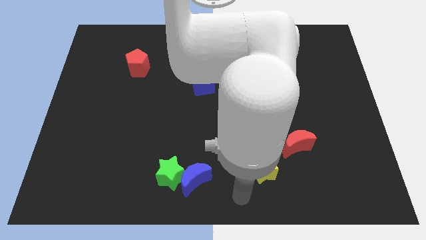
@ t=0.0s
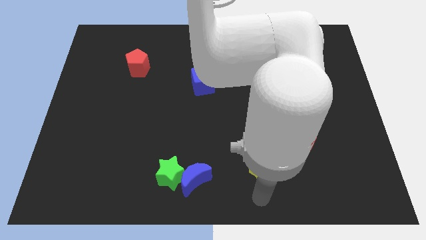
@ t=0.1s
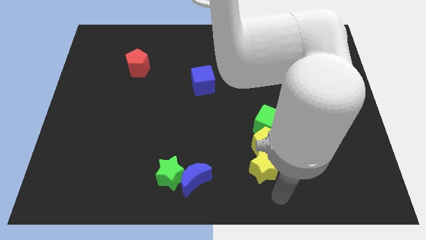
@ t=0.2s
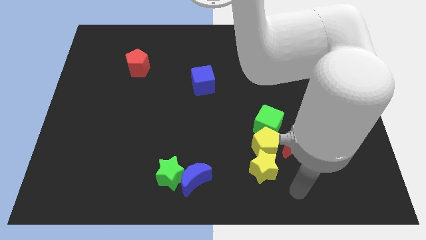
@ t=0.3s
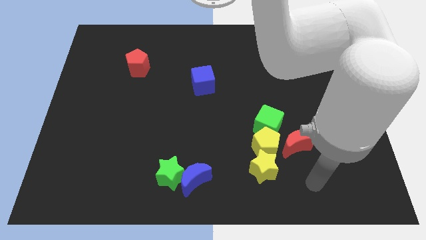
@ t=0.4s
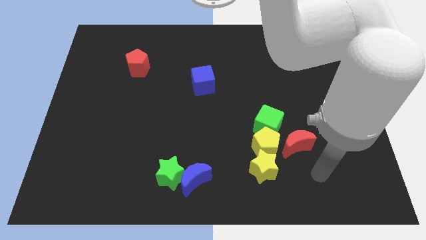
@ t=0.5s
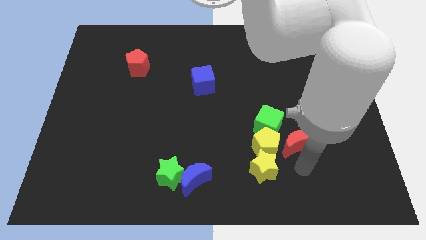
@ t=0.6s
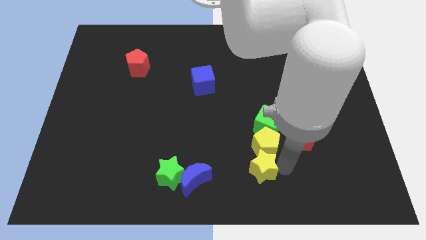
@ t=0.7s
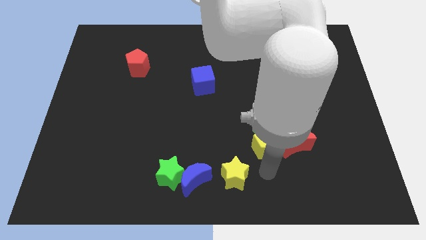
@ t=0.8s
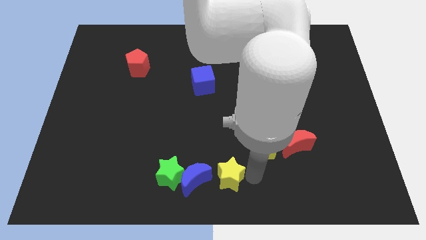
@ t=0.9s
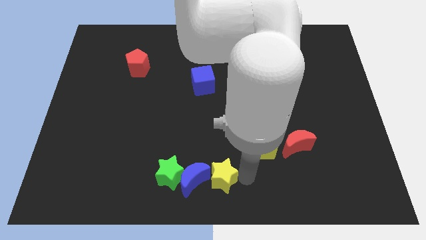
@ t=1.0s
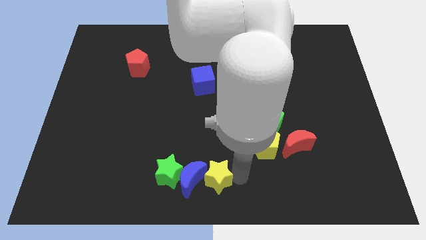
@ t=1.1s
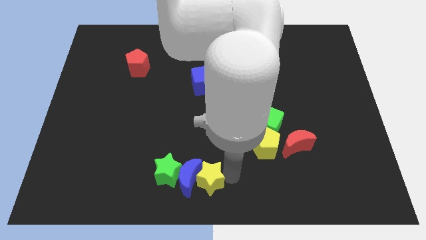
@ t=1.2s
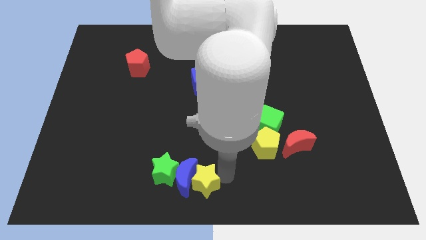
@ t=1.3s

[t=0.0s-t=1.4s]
push the yellow star at the right of the blue moon

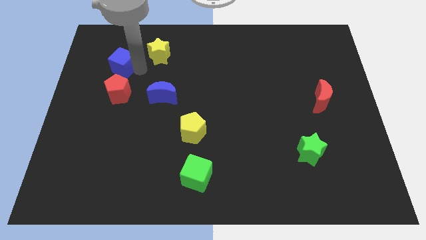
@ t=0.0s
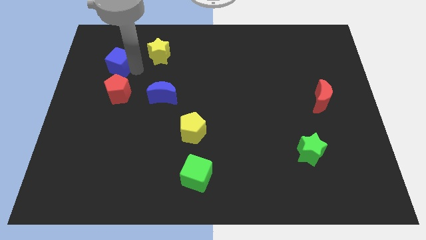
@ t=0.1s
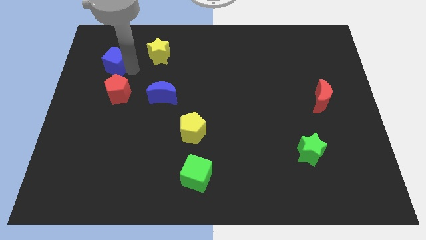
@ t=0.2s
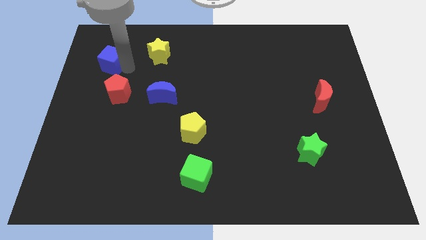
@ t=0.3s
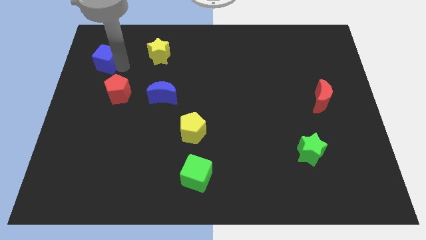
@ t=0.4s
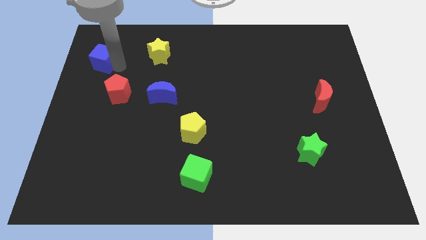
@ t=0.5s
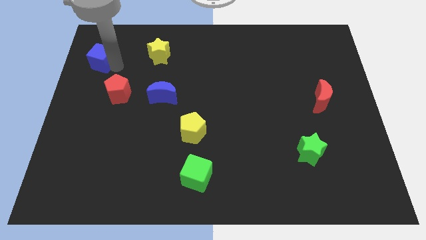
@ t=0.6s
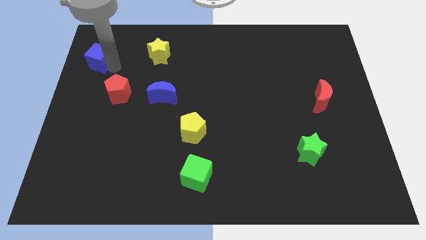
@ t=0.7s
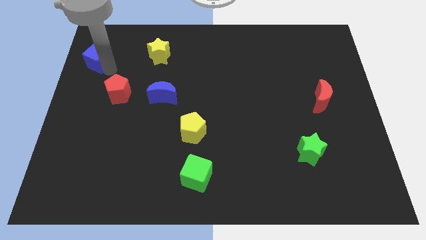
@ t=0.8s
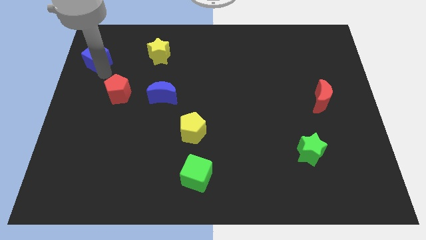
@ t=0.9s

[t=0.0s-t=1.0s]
slide blue cube on left

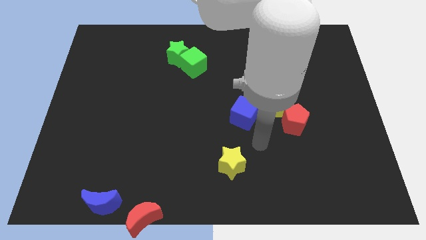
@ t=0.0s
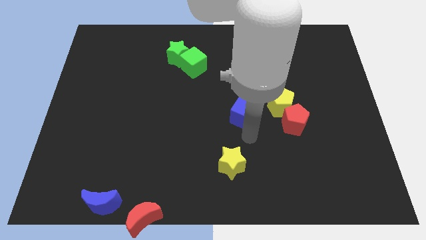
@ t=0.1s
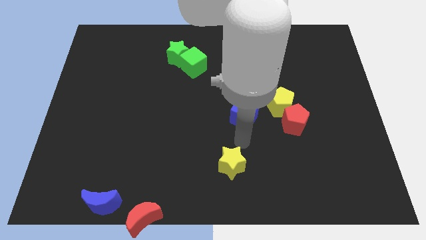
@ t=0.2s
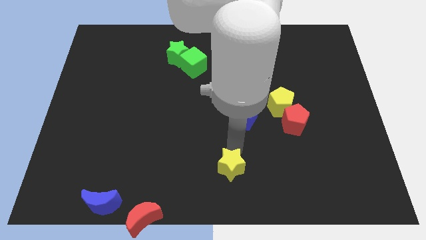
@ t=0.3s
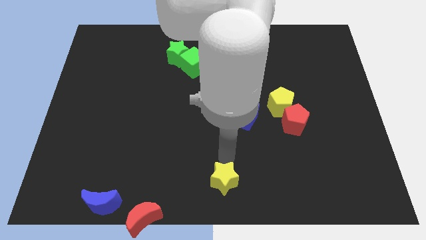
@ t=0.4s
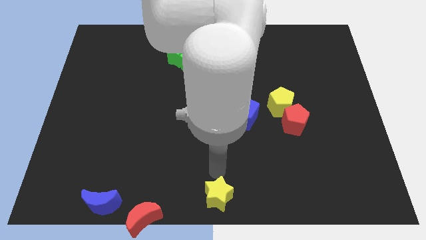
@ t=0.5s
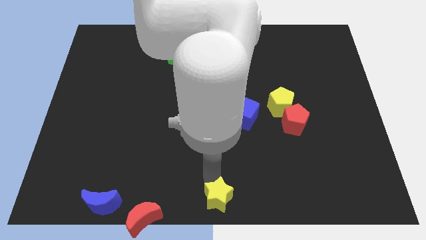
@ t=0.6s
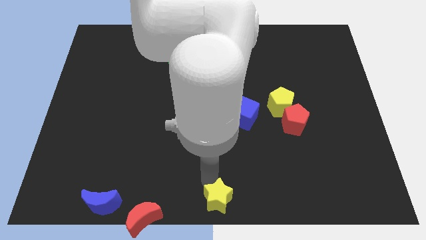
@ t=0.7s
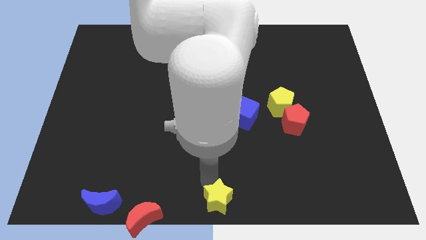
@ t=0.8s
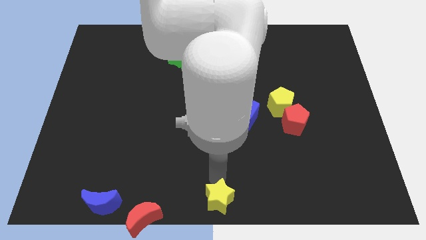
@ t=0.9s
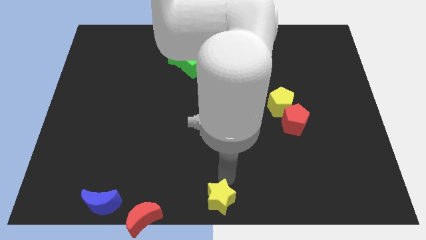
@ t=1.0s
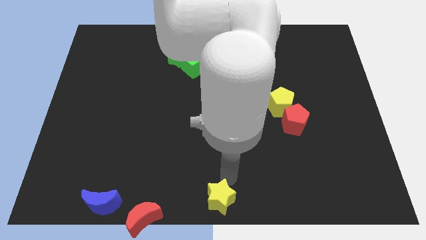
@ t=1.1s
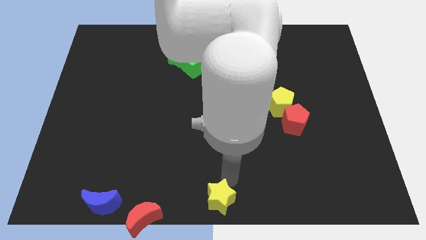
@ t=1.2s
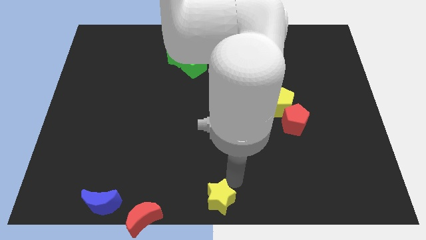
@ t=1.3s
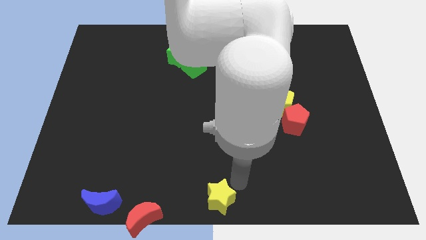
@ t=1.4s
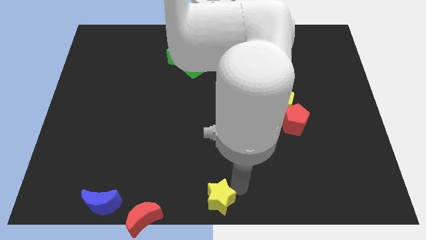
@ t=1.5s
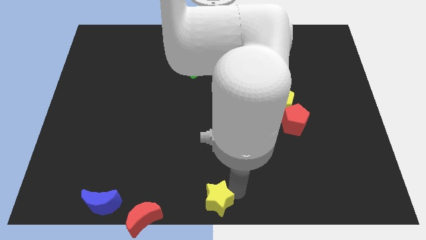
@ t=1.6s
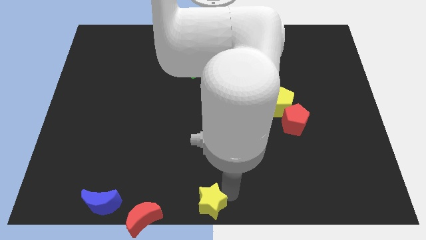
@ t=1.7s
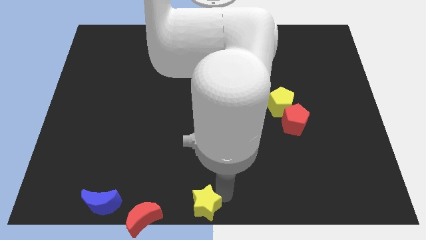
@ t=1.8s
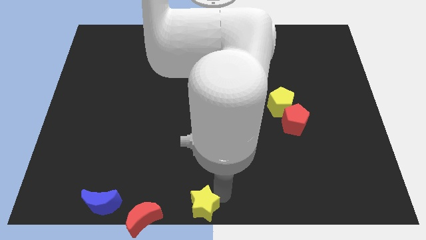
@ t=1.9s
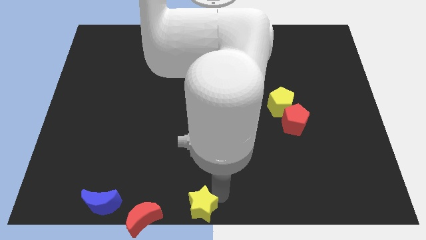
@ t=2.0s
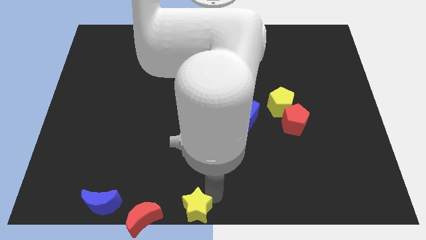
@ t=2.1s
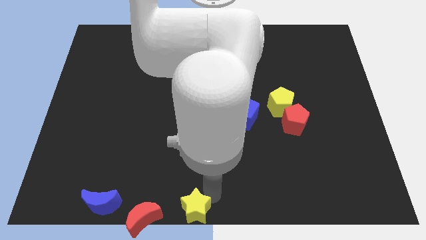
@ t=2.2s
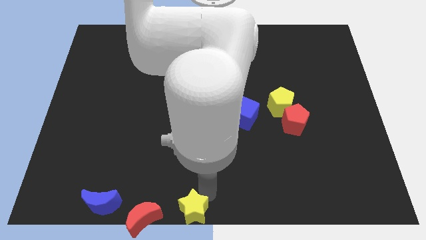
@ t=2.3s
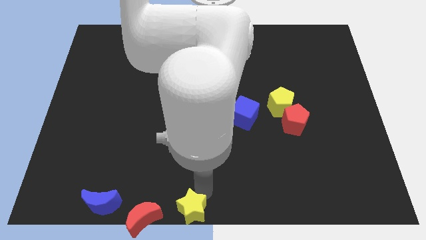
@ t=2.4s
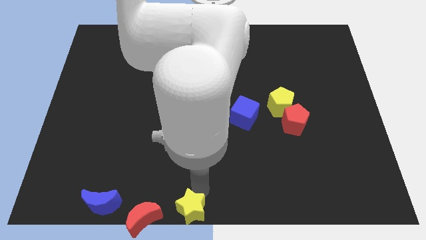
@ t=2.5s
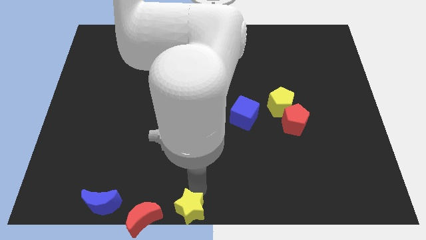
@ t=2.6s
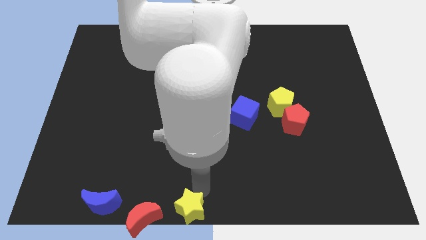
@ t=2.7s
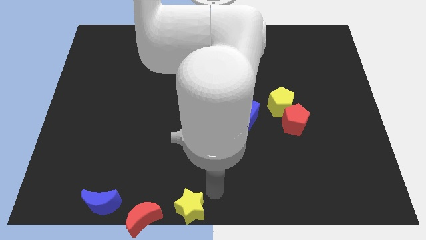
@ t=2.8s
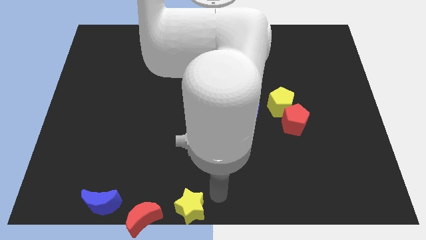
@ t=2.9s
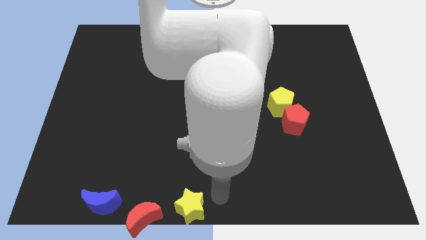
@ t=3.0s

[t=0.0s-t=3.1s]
push the yellow star to the right of the red crescent

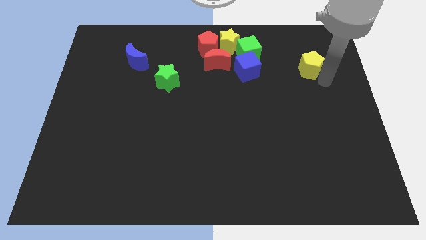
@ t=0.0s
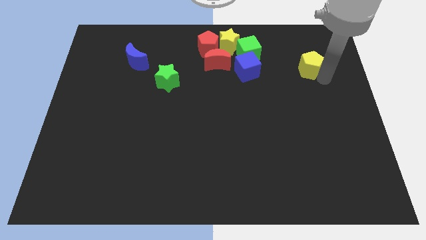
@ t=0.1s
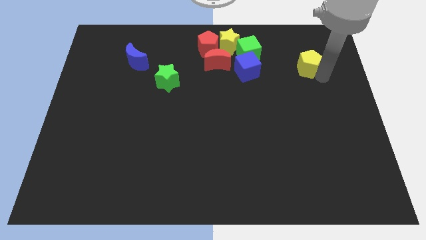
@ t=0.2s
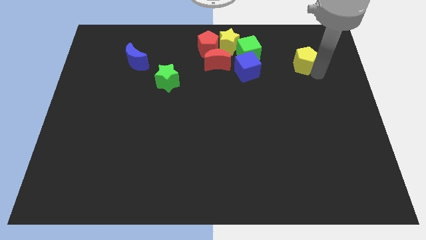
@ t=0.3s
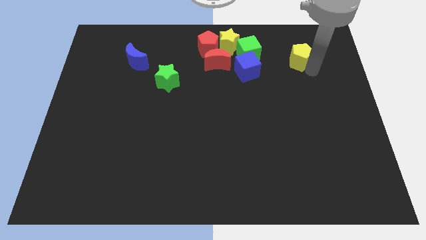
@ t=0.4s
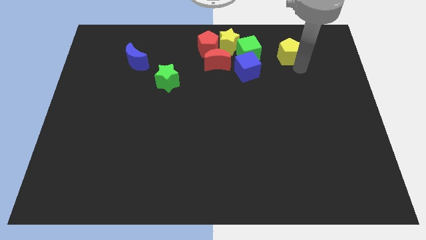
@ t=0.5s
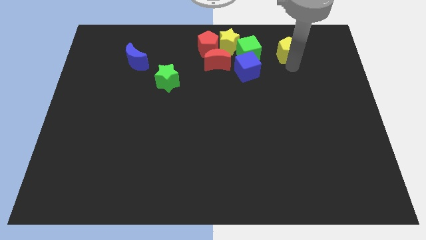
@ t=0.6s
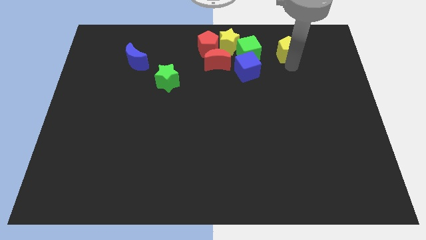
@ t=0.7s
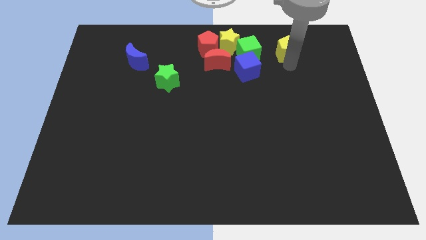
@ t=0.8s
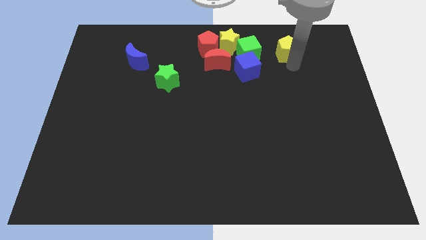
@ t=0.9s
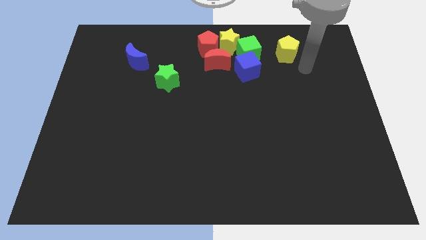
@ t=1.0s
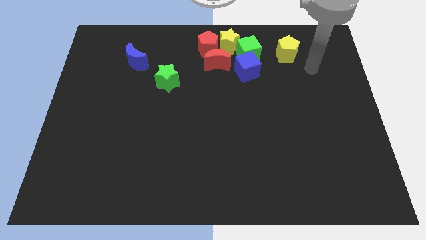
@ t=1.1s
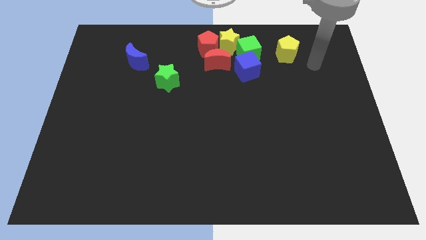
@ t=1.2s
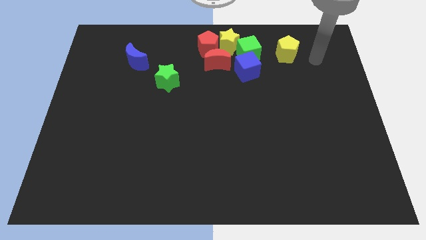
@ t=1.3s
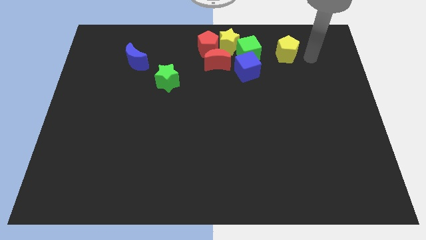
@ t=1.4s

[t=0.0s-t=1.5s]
move the yellow pentagon to the right of the green cube

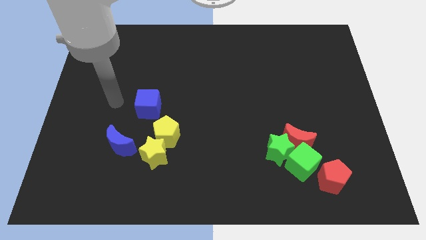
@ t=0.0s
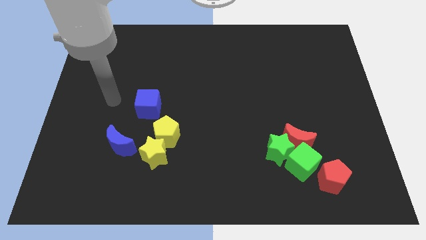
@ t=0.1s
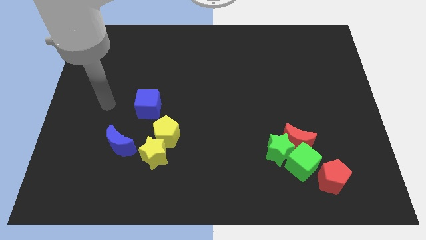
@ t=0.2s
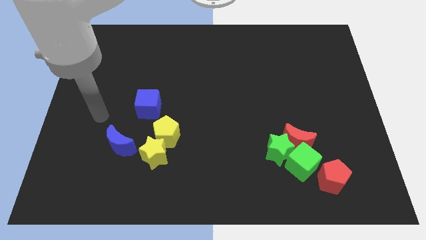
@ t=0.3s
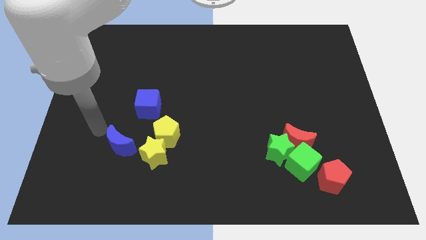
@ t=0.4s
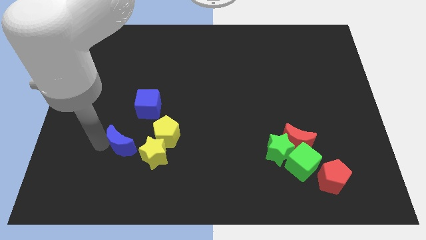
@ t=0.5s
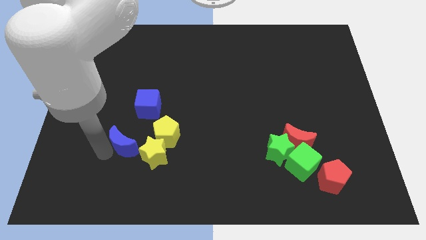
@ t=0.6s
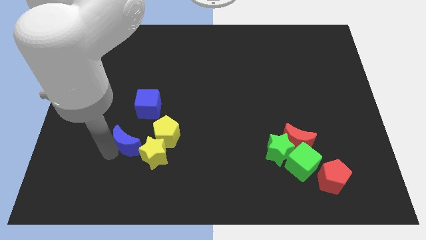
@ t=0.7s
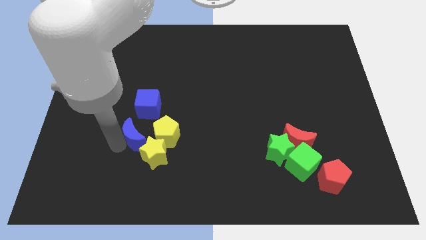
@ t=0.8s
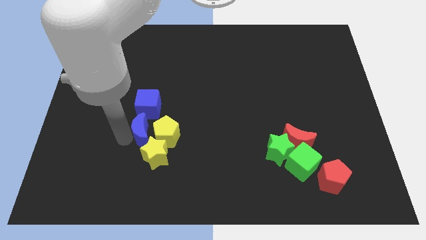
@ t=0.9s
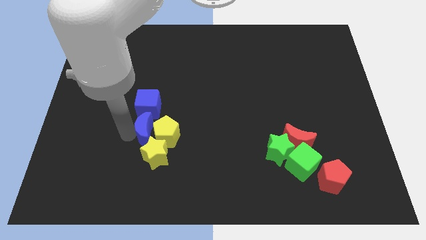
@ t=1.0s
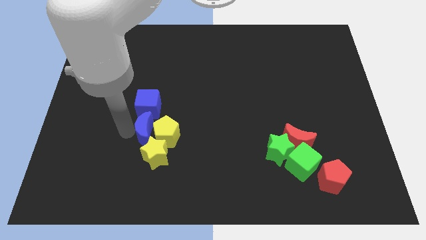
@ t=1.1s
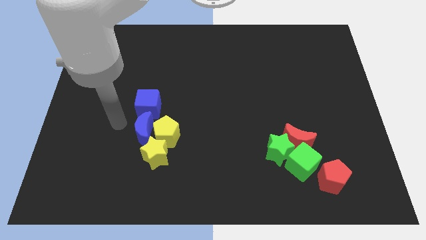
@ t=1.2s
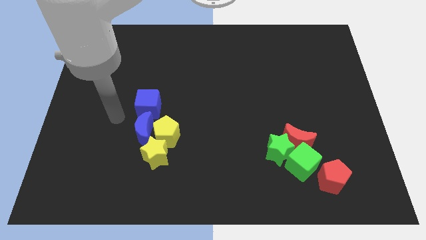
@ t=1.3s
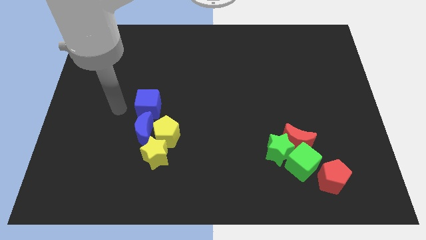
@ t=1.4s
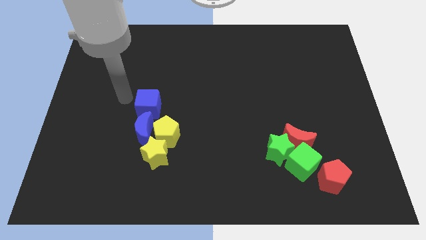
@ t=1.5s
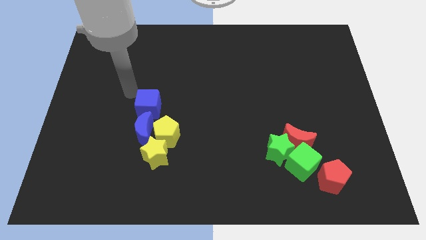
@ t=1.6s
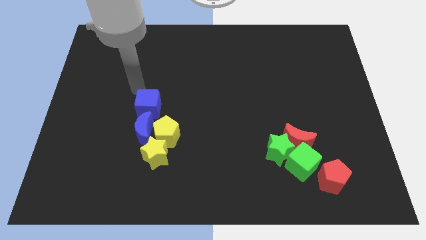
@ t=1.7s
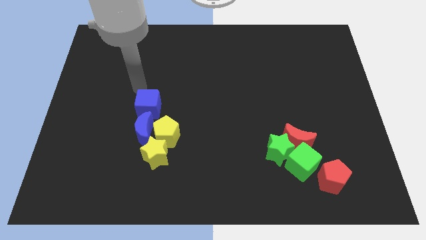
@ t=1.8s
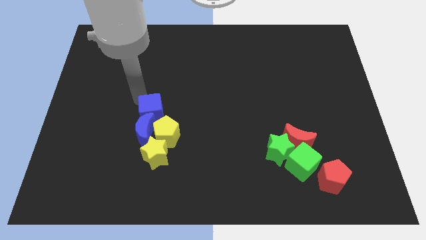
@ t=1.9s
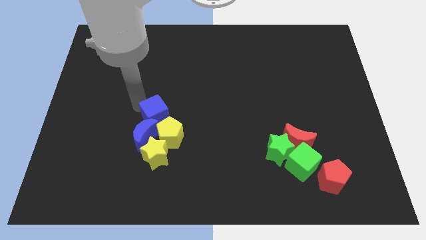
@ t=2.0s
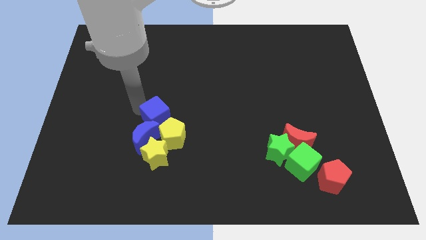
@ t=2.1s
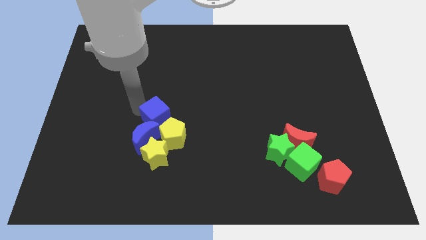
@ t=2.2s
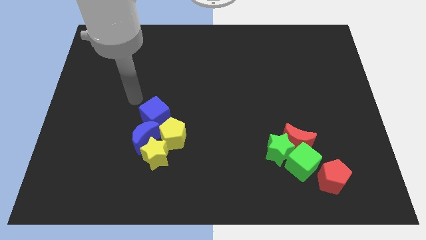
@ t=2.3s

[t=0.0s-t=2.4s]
move the blue cube into the yellow pentagon and blue moon
